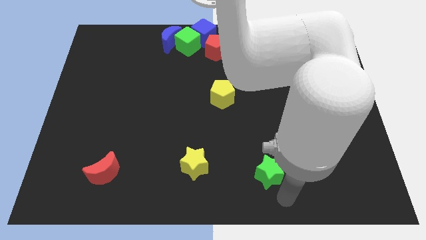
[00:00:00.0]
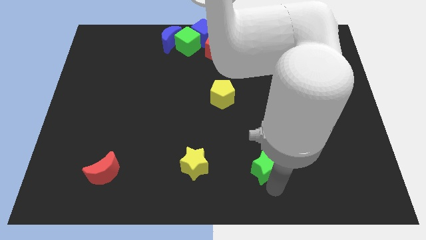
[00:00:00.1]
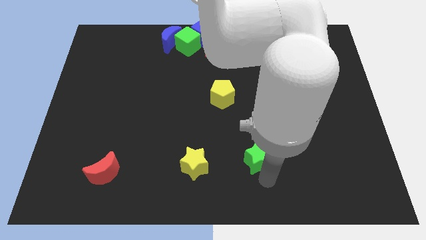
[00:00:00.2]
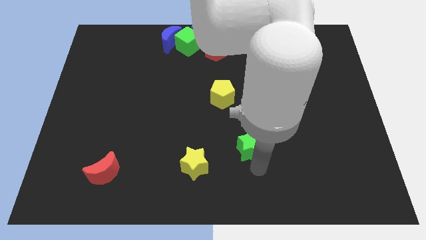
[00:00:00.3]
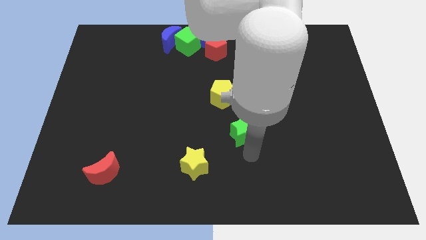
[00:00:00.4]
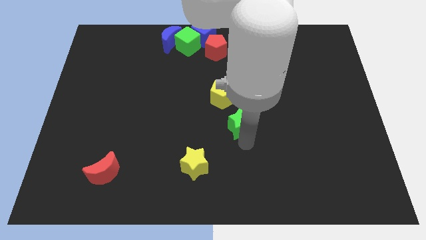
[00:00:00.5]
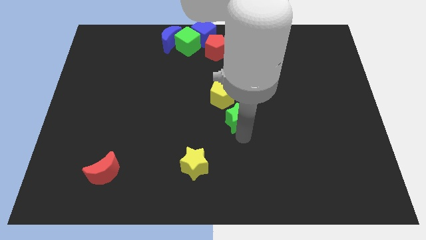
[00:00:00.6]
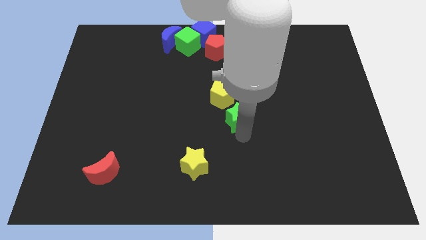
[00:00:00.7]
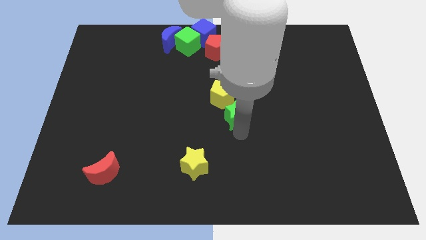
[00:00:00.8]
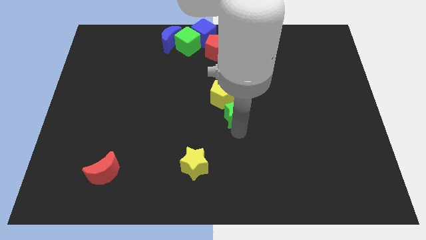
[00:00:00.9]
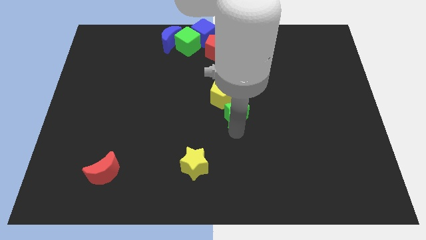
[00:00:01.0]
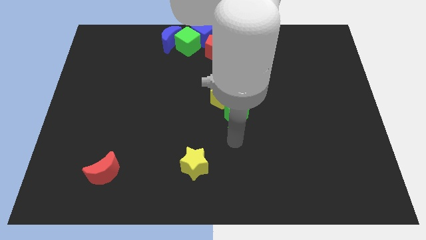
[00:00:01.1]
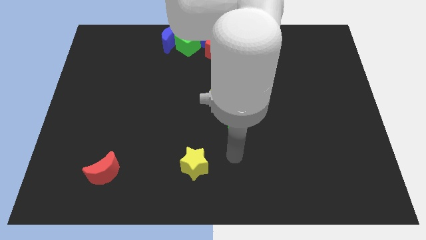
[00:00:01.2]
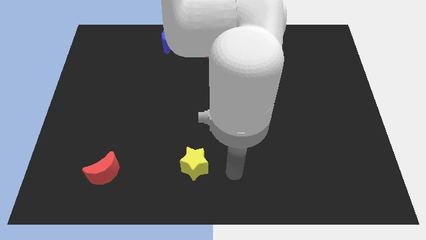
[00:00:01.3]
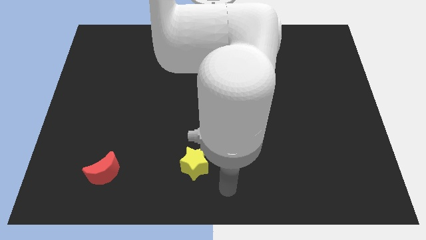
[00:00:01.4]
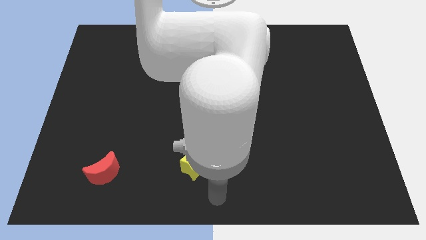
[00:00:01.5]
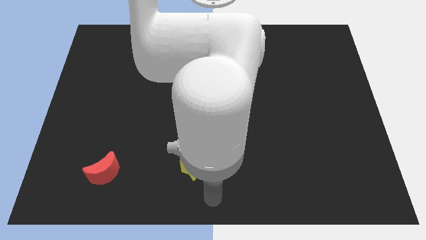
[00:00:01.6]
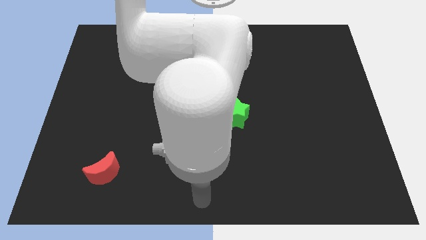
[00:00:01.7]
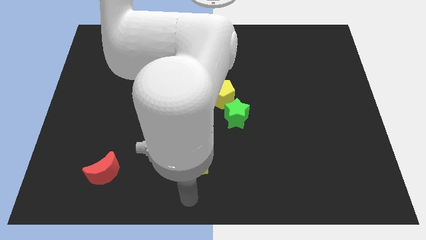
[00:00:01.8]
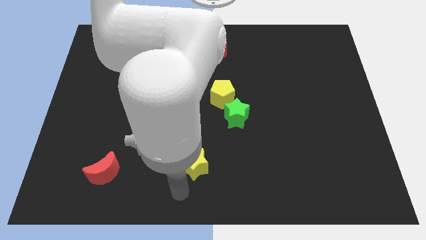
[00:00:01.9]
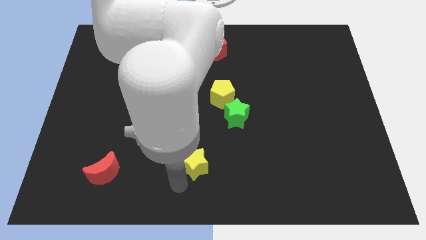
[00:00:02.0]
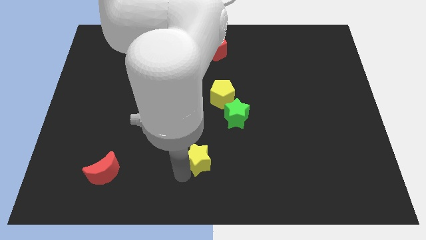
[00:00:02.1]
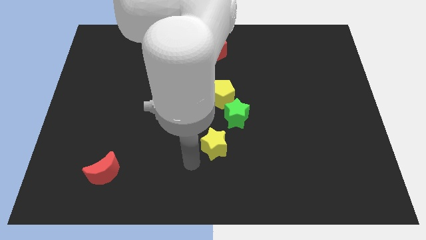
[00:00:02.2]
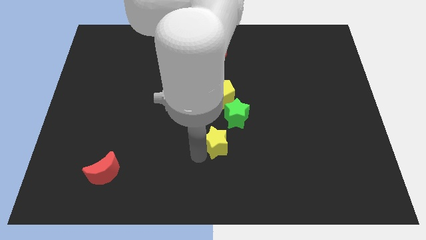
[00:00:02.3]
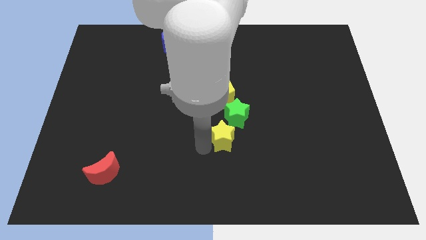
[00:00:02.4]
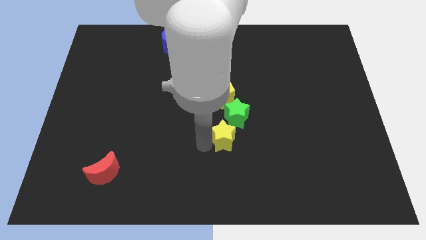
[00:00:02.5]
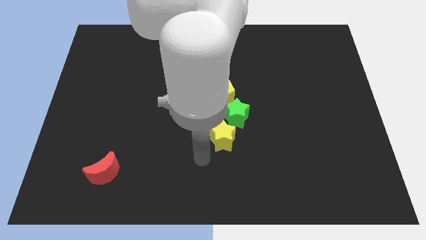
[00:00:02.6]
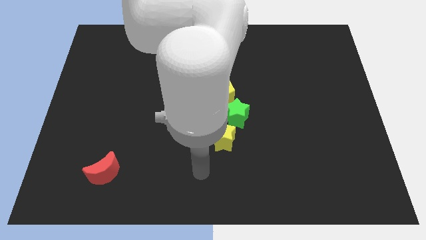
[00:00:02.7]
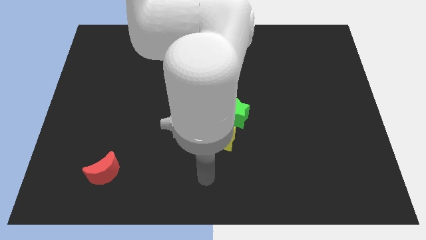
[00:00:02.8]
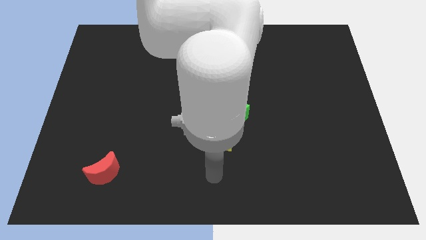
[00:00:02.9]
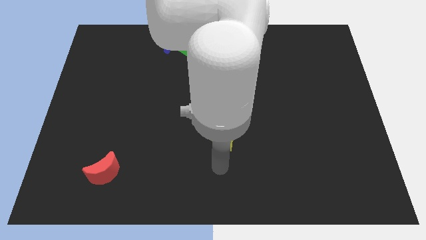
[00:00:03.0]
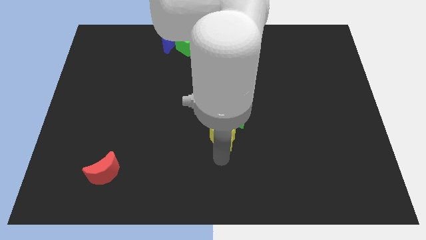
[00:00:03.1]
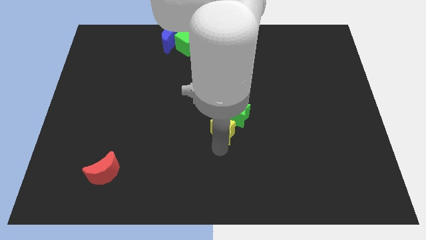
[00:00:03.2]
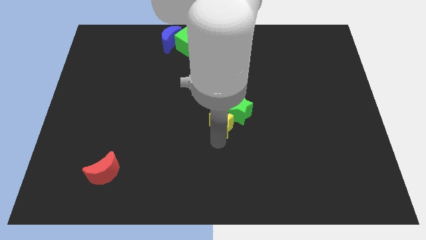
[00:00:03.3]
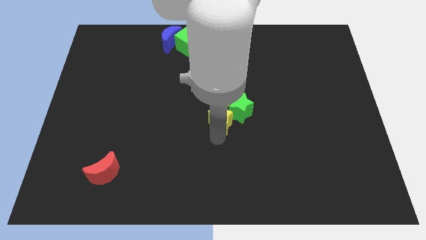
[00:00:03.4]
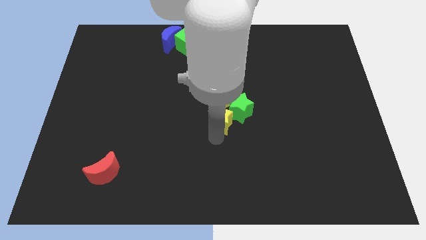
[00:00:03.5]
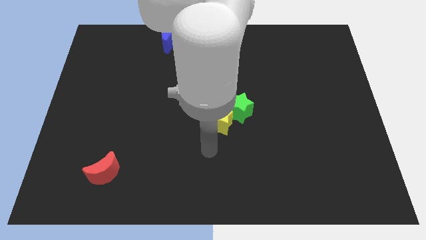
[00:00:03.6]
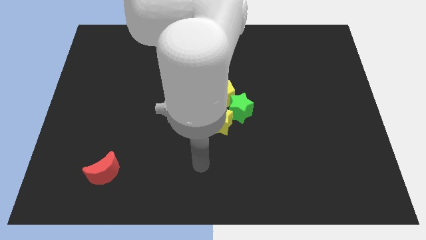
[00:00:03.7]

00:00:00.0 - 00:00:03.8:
push the green star and the yellow star into the yellow pentagon

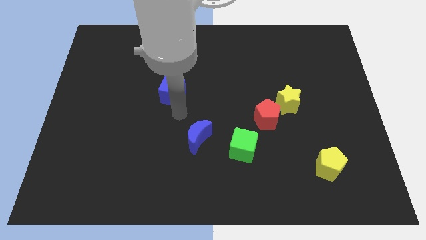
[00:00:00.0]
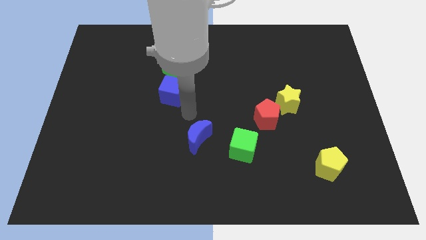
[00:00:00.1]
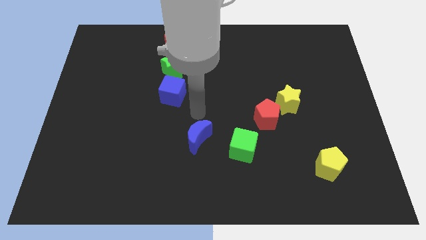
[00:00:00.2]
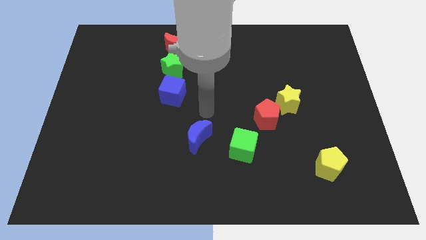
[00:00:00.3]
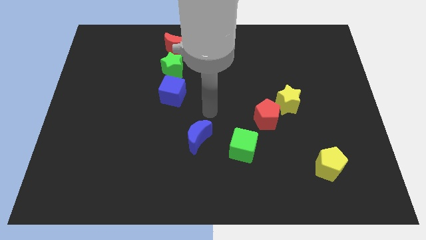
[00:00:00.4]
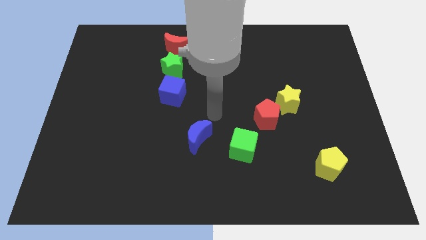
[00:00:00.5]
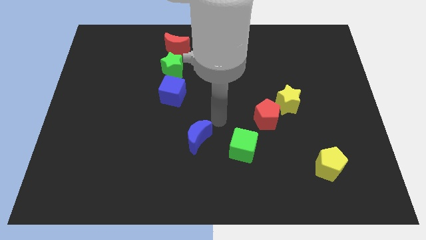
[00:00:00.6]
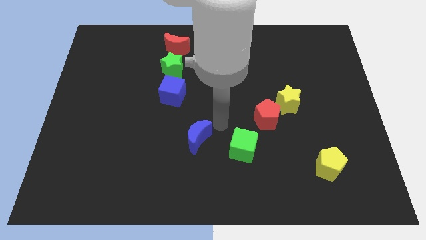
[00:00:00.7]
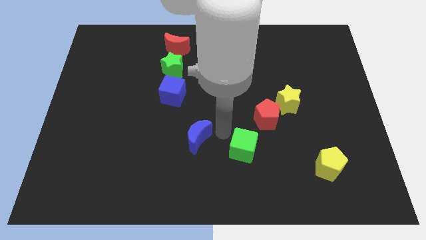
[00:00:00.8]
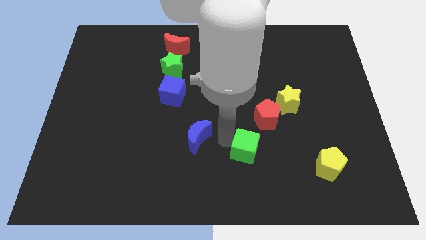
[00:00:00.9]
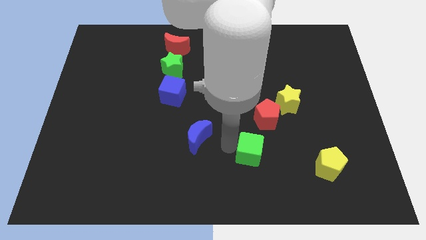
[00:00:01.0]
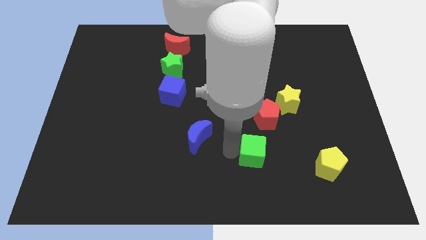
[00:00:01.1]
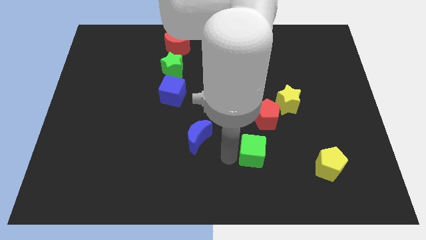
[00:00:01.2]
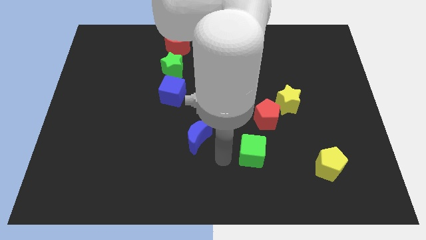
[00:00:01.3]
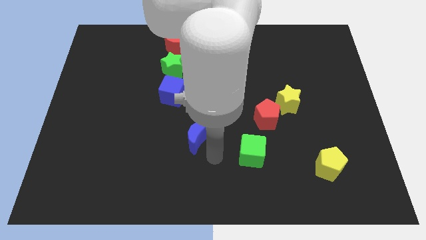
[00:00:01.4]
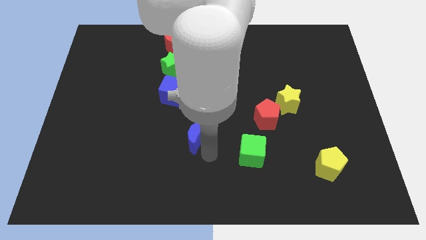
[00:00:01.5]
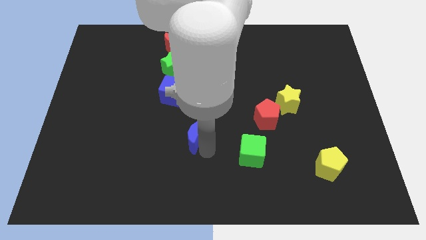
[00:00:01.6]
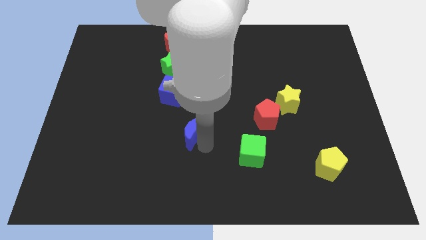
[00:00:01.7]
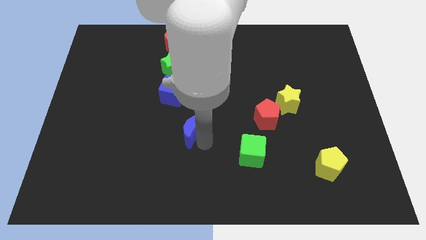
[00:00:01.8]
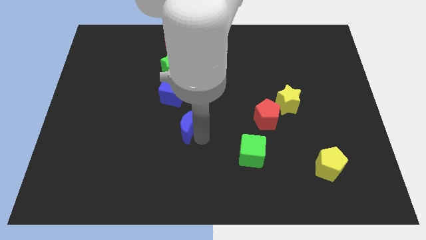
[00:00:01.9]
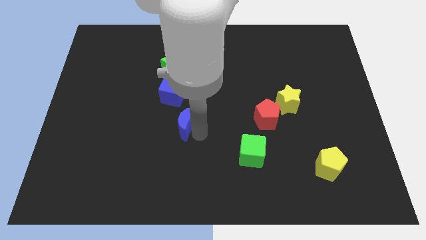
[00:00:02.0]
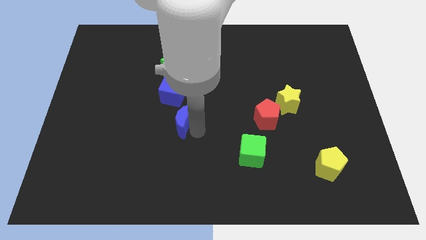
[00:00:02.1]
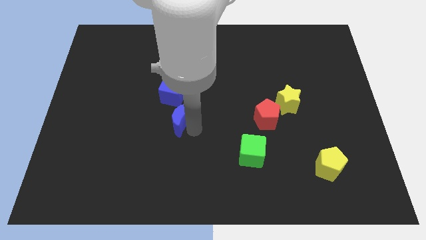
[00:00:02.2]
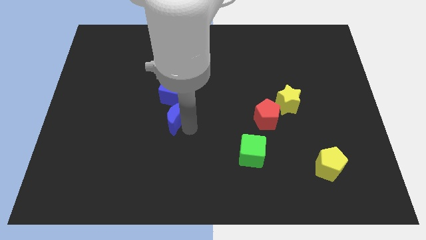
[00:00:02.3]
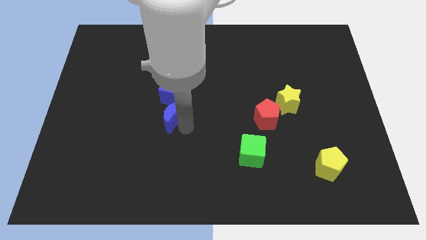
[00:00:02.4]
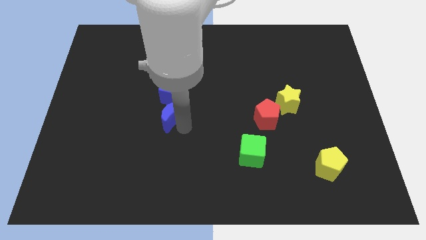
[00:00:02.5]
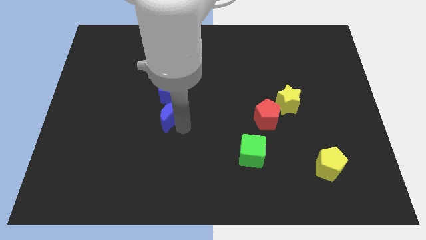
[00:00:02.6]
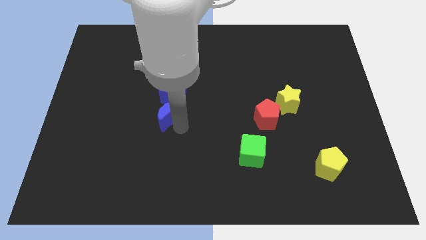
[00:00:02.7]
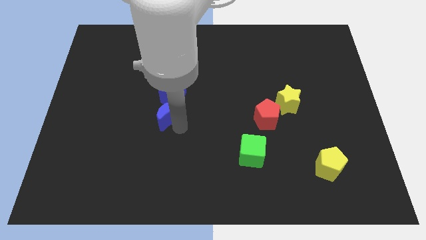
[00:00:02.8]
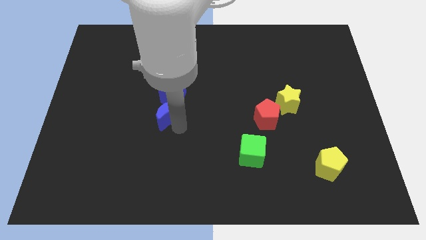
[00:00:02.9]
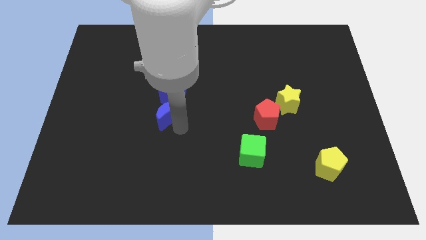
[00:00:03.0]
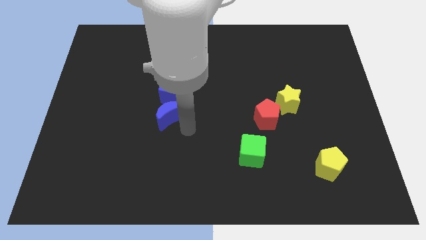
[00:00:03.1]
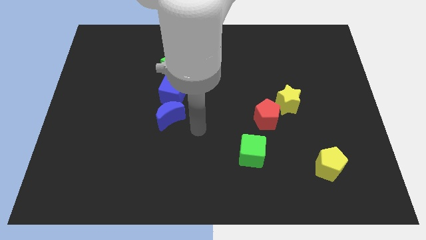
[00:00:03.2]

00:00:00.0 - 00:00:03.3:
place the blue crescent below the blue cube

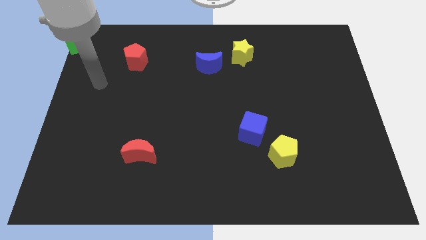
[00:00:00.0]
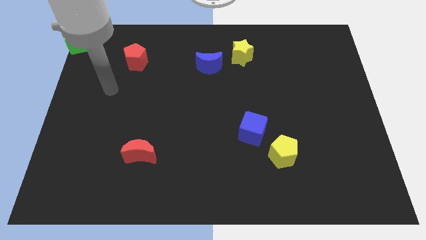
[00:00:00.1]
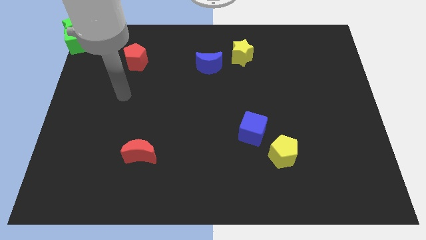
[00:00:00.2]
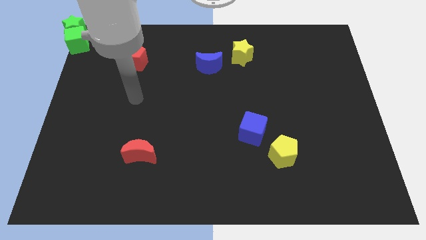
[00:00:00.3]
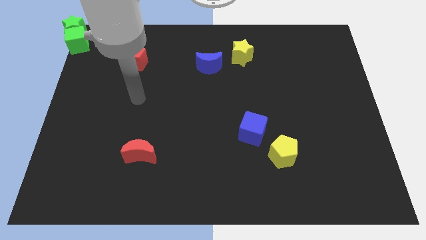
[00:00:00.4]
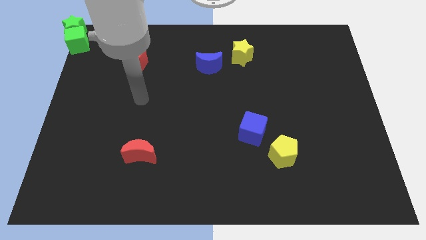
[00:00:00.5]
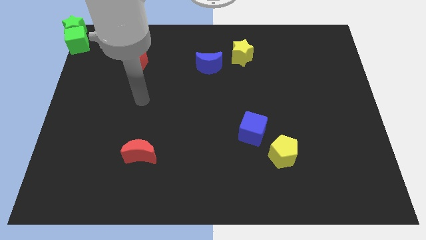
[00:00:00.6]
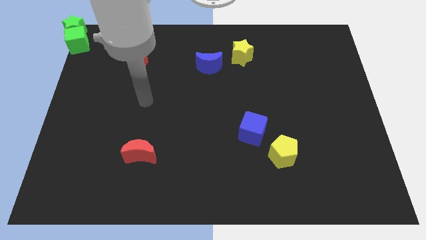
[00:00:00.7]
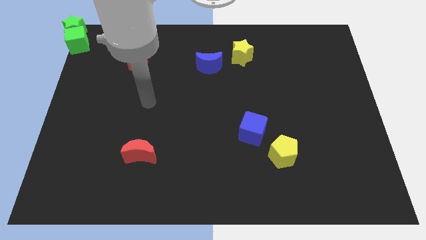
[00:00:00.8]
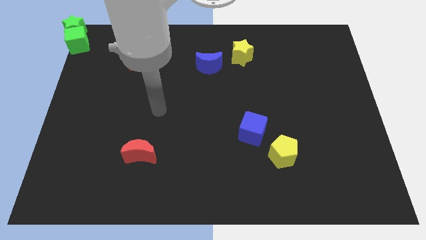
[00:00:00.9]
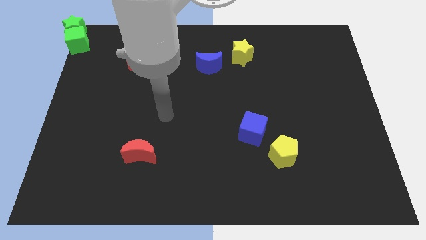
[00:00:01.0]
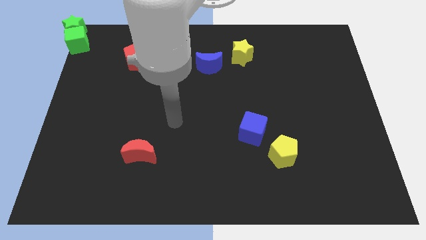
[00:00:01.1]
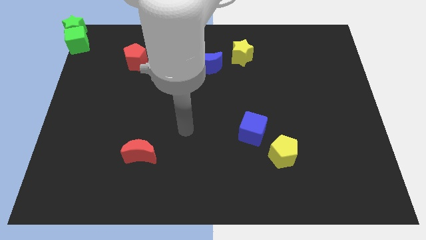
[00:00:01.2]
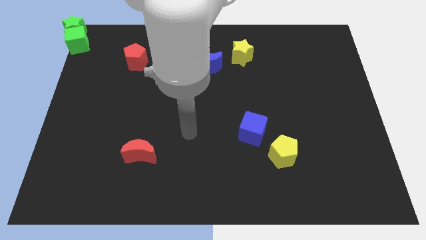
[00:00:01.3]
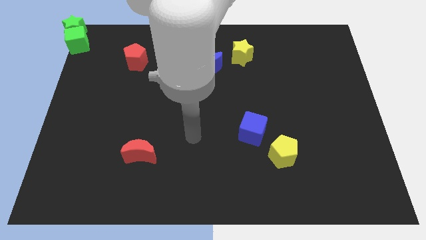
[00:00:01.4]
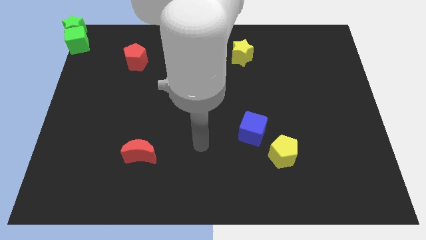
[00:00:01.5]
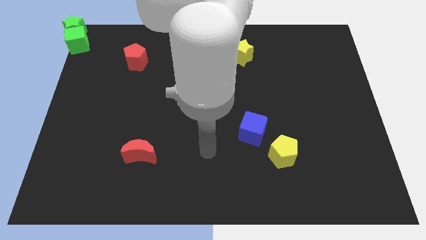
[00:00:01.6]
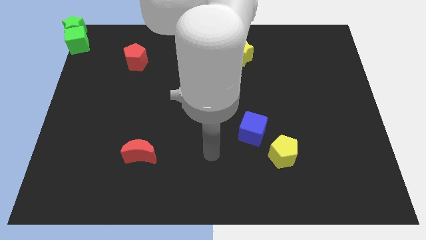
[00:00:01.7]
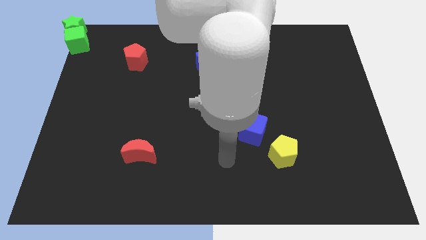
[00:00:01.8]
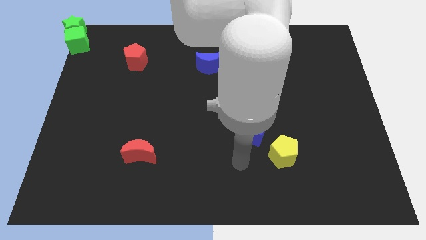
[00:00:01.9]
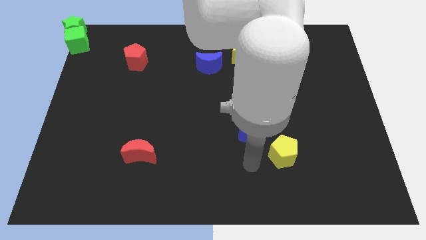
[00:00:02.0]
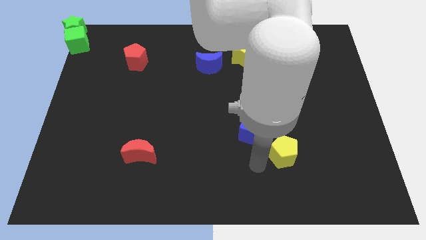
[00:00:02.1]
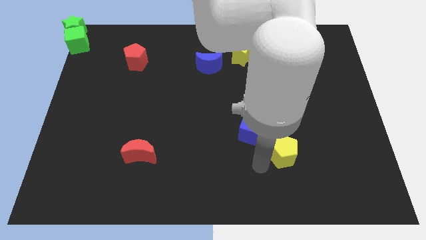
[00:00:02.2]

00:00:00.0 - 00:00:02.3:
move your arm towards the yellow pentagon
